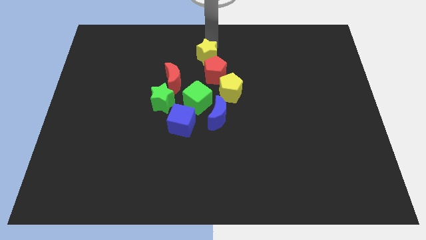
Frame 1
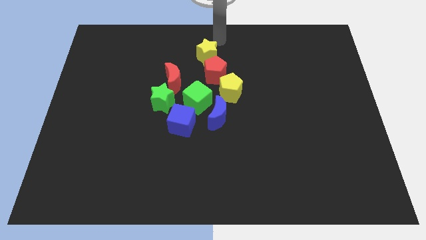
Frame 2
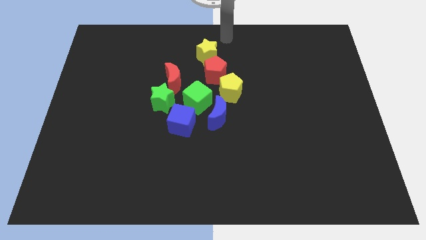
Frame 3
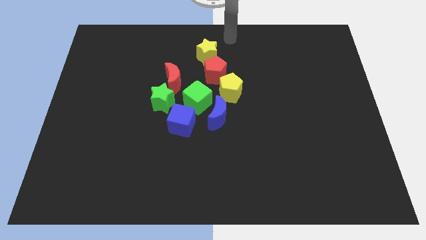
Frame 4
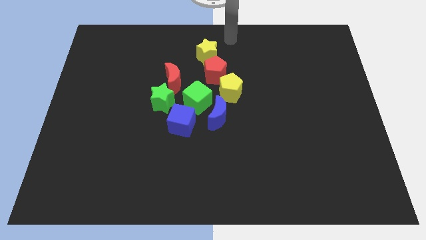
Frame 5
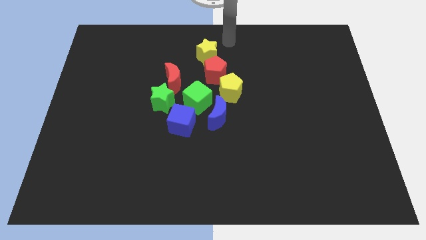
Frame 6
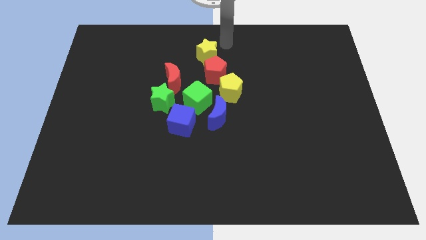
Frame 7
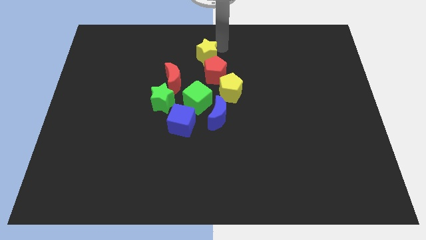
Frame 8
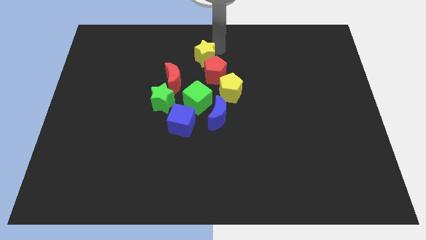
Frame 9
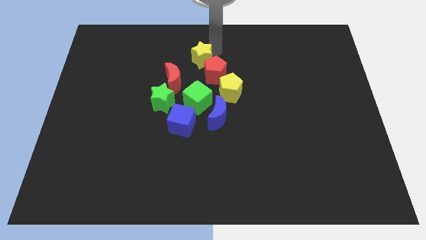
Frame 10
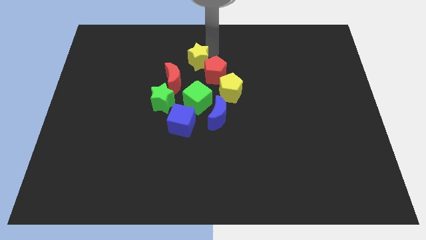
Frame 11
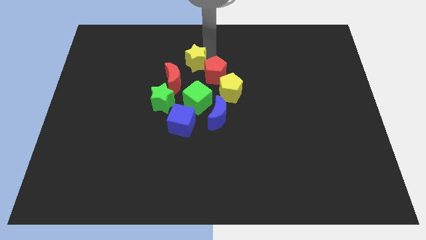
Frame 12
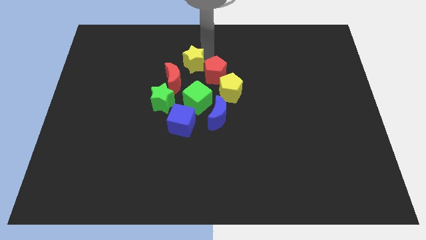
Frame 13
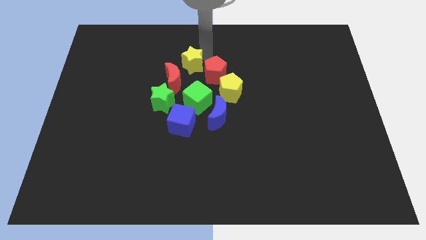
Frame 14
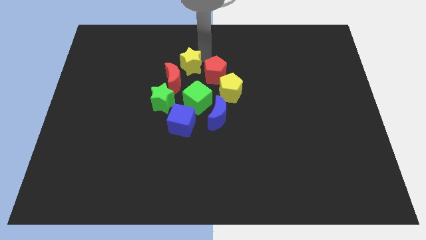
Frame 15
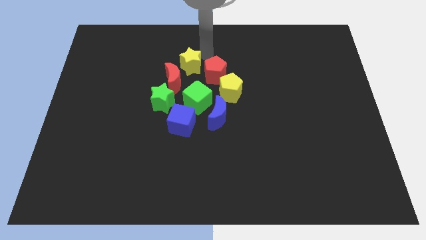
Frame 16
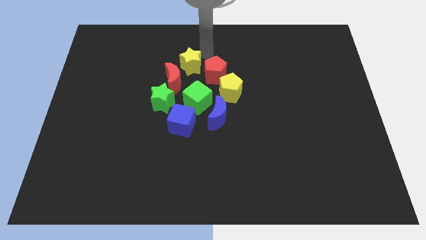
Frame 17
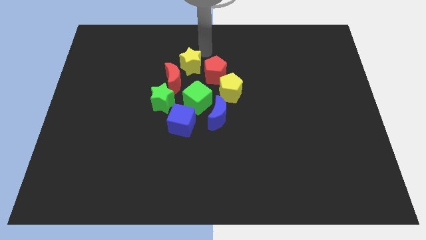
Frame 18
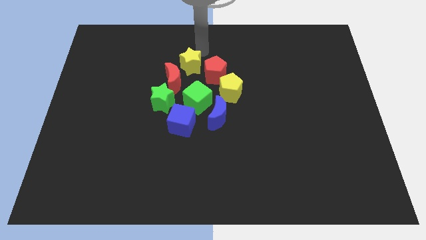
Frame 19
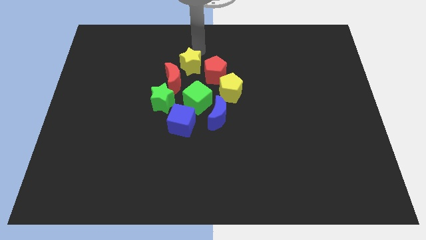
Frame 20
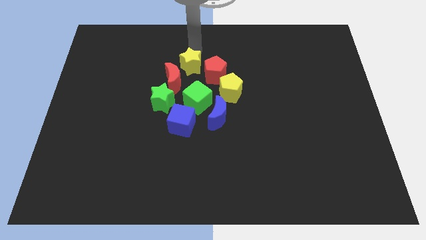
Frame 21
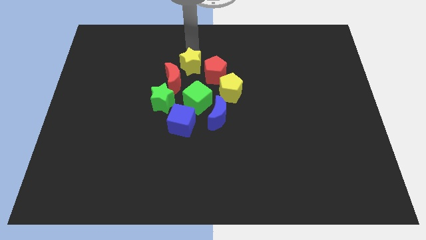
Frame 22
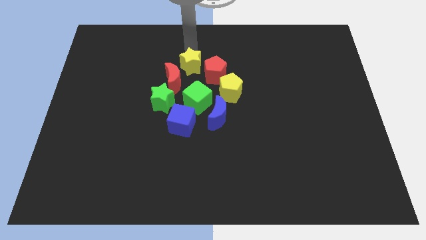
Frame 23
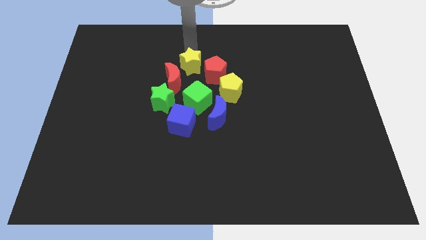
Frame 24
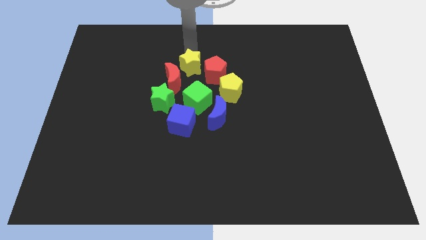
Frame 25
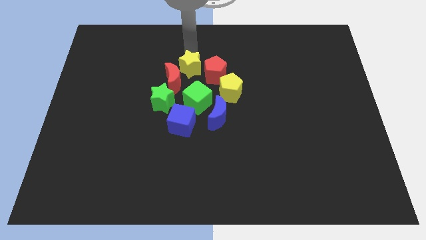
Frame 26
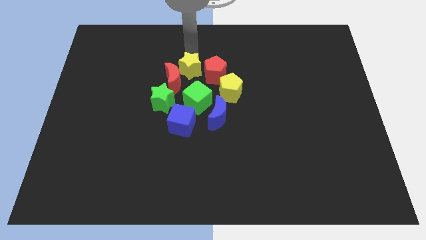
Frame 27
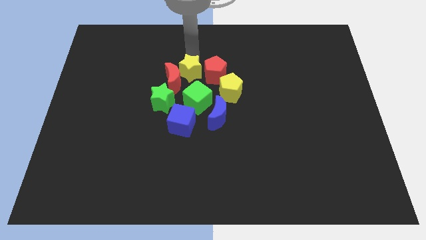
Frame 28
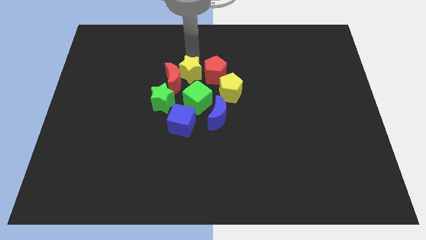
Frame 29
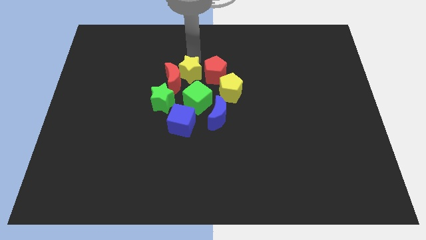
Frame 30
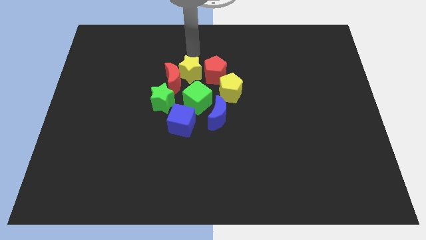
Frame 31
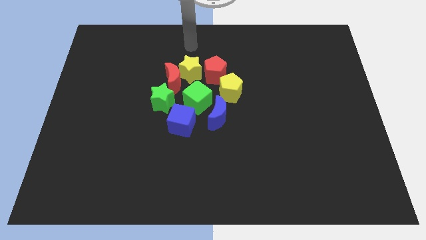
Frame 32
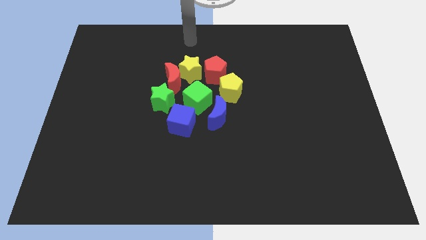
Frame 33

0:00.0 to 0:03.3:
place the yellow star in between red blocks

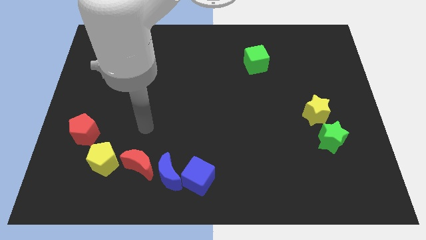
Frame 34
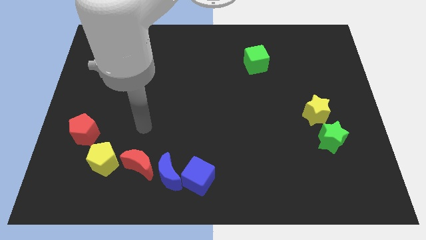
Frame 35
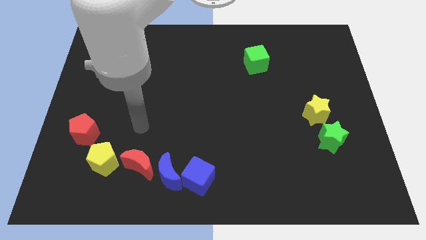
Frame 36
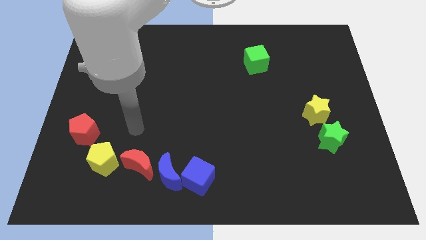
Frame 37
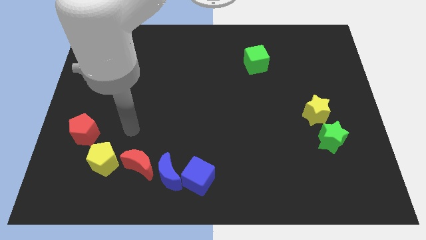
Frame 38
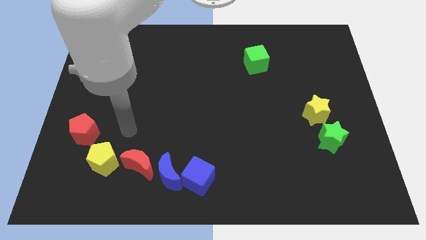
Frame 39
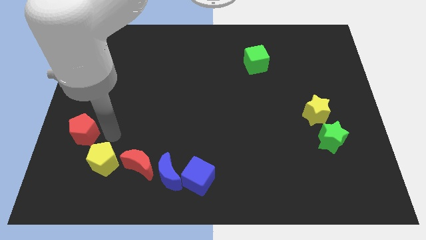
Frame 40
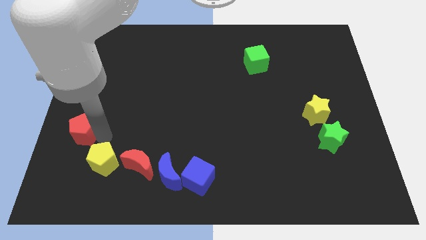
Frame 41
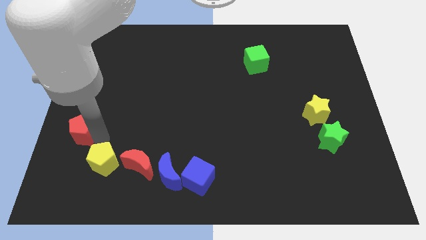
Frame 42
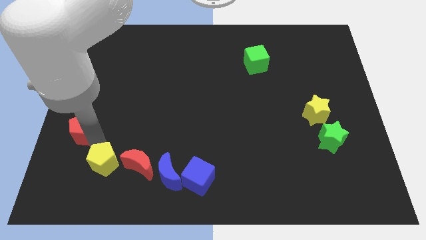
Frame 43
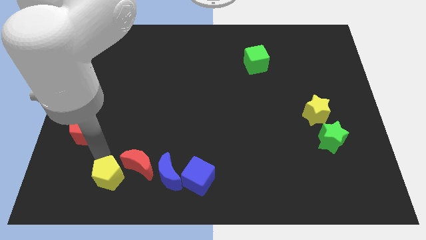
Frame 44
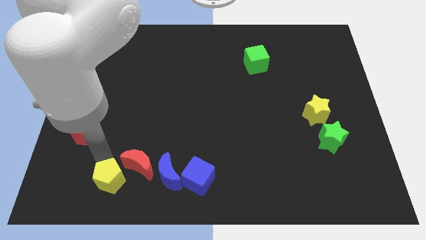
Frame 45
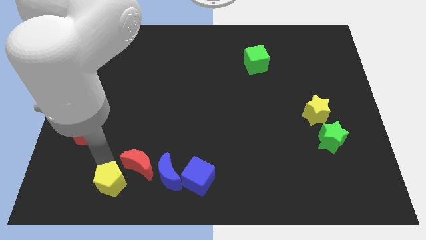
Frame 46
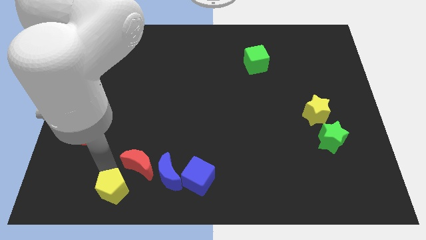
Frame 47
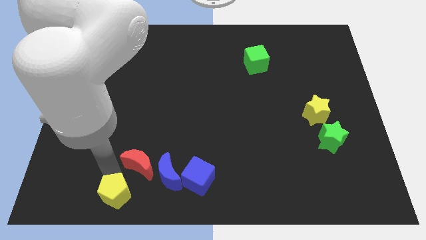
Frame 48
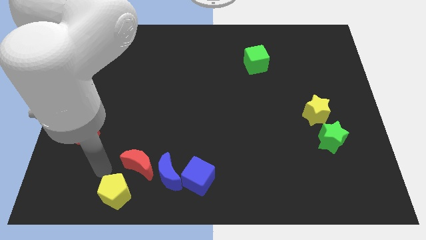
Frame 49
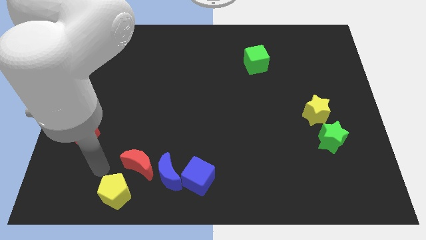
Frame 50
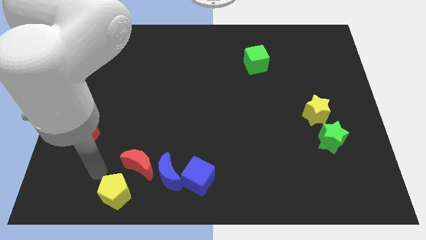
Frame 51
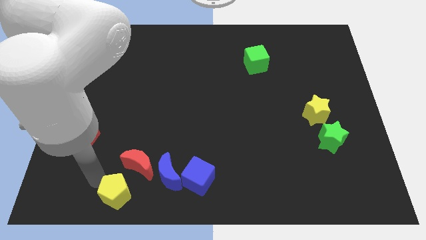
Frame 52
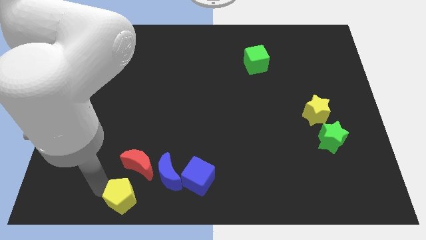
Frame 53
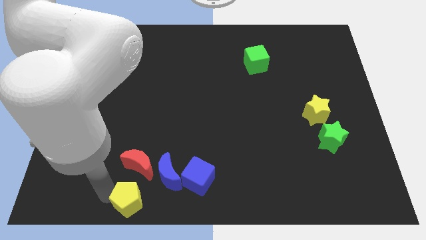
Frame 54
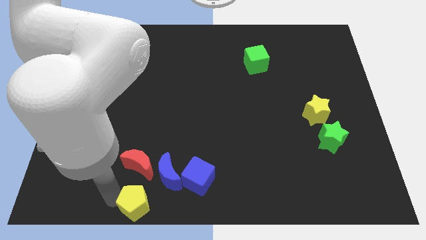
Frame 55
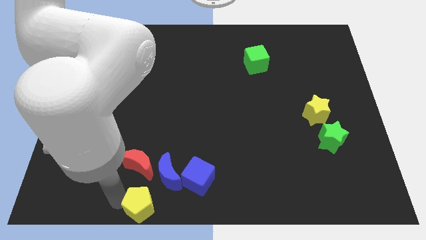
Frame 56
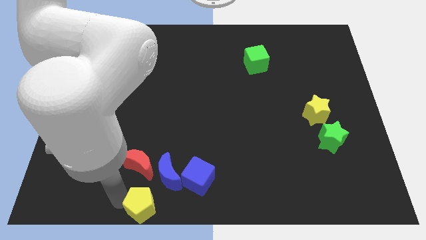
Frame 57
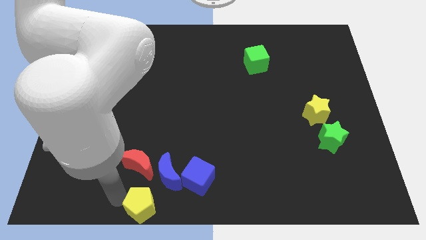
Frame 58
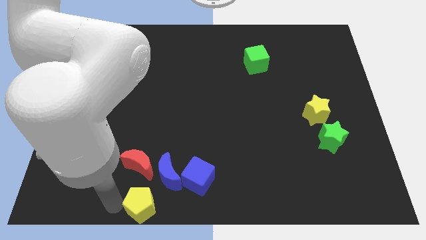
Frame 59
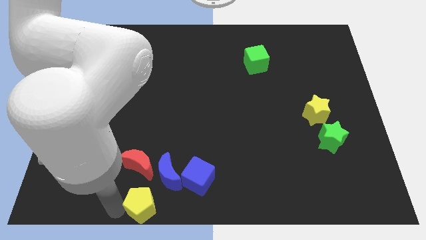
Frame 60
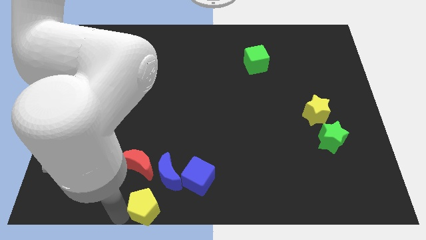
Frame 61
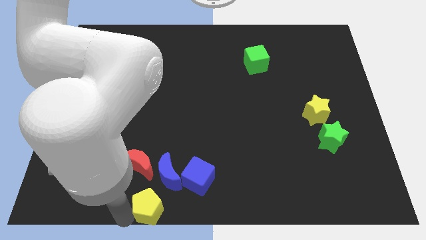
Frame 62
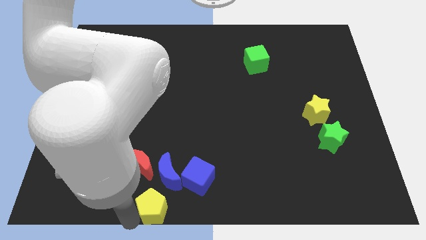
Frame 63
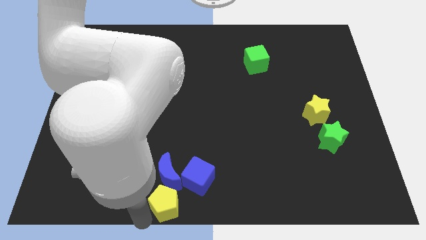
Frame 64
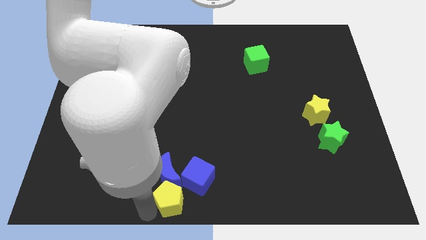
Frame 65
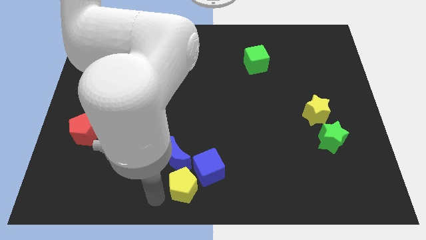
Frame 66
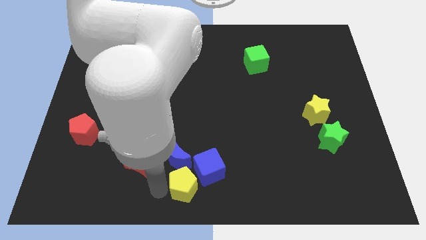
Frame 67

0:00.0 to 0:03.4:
push the yellow pentagon into the blue crescent and blue cube

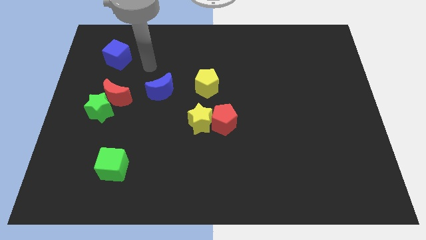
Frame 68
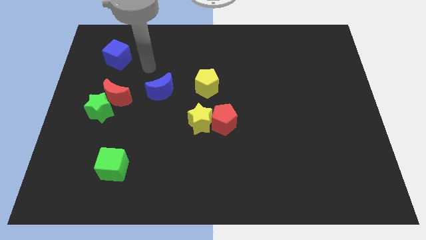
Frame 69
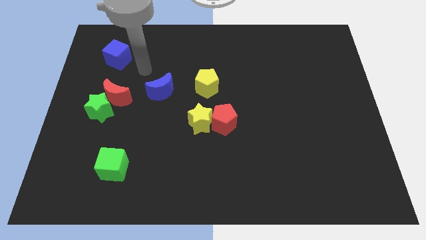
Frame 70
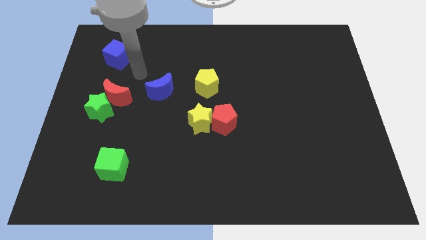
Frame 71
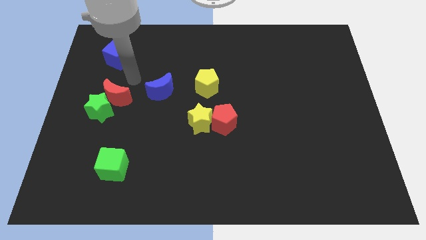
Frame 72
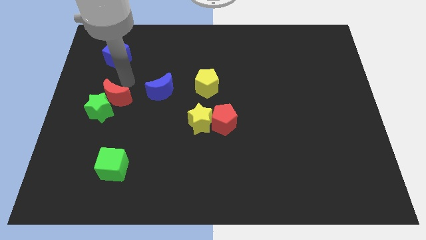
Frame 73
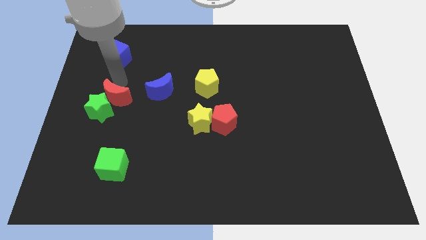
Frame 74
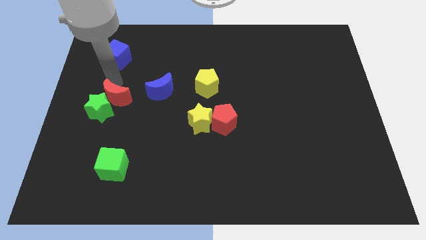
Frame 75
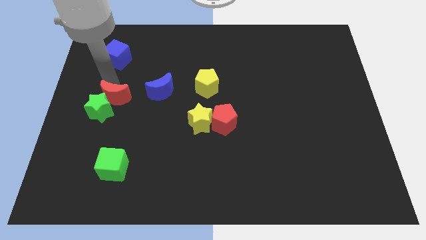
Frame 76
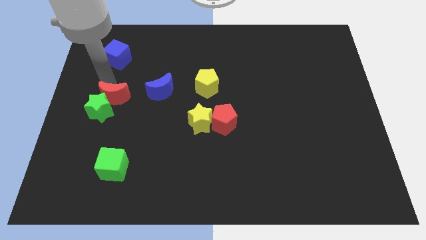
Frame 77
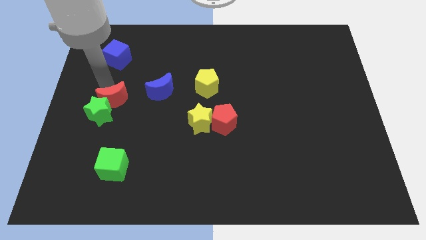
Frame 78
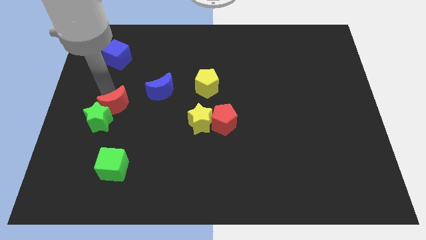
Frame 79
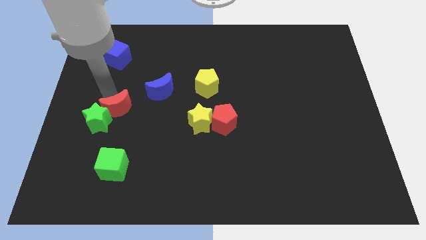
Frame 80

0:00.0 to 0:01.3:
move the red crescent right above the green star

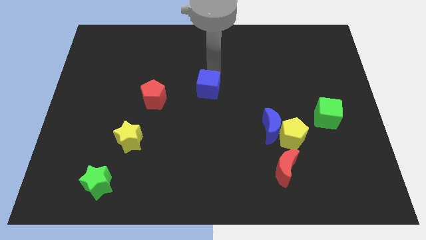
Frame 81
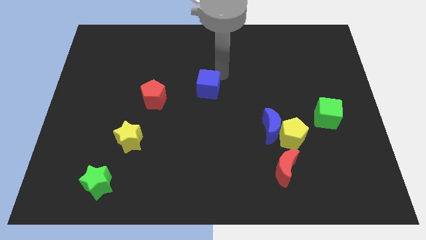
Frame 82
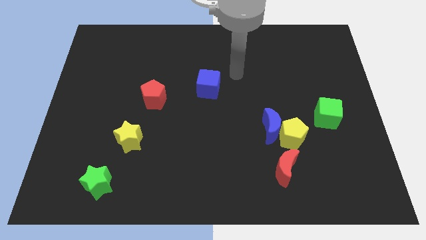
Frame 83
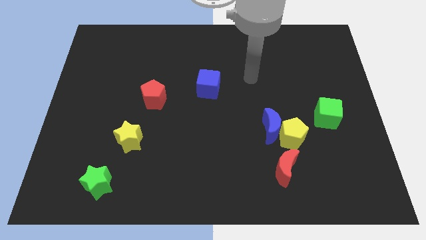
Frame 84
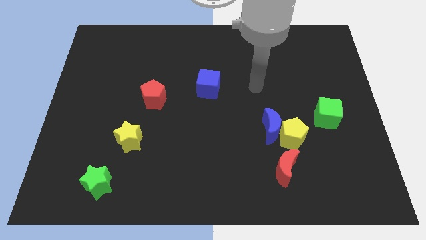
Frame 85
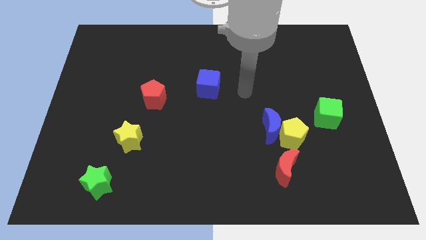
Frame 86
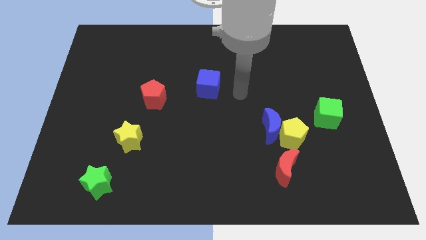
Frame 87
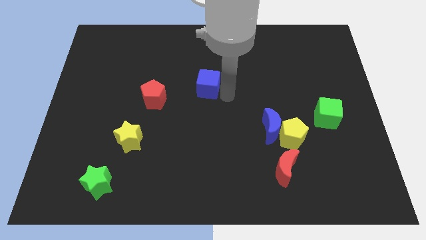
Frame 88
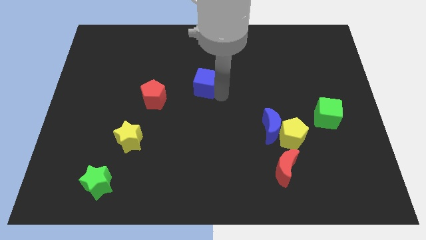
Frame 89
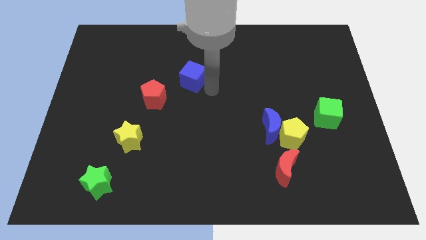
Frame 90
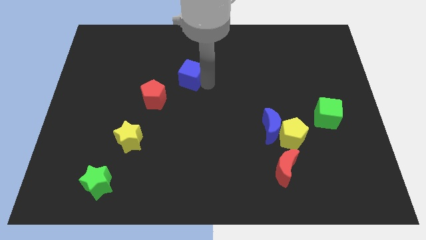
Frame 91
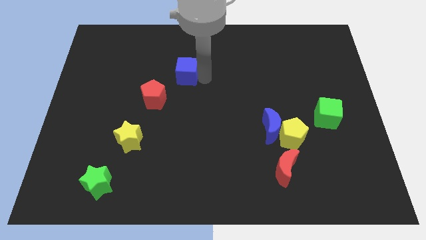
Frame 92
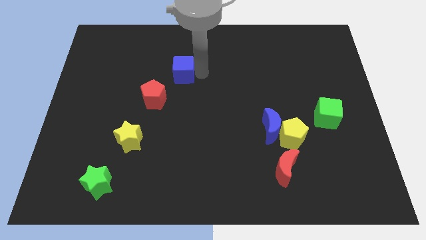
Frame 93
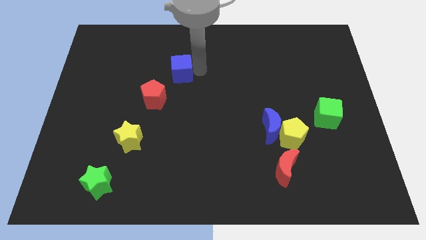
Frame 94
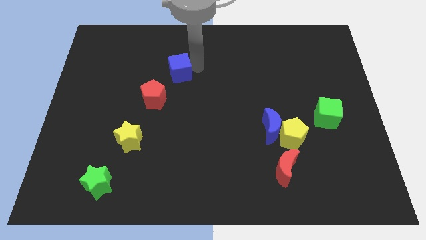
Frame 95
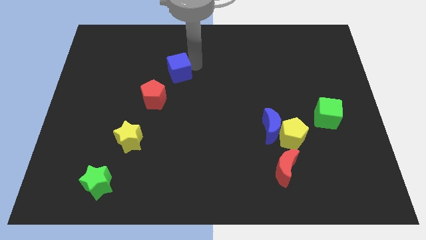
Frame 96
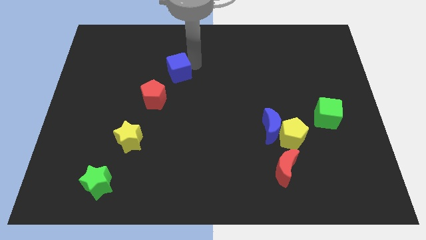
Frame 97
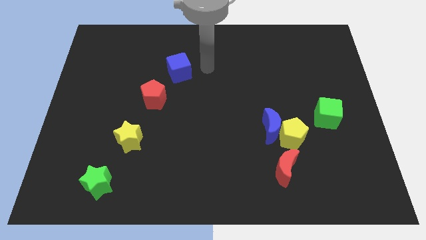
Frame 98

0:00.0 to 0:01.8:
push the blue cube to the top right of the red pentagon
